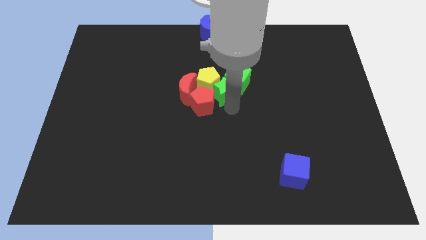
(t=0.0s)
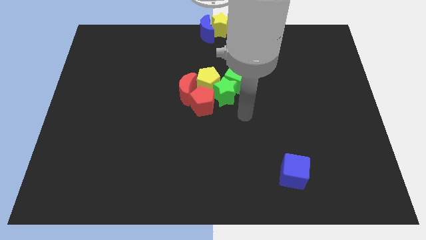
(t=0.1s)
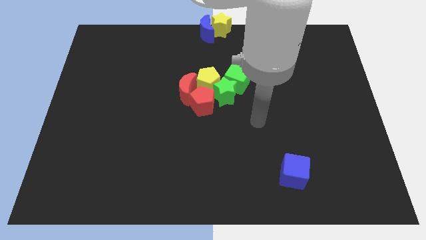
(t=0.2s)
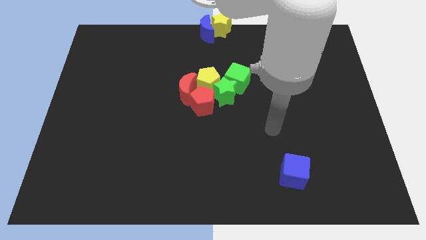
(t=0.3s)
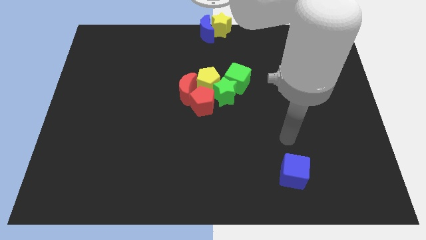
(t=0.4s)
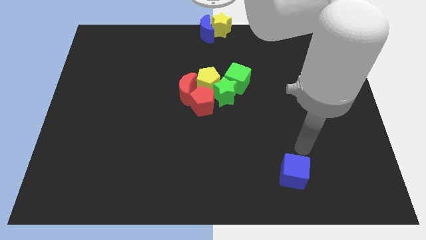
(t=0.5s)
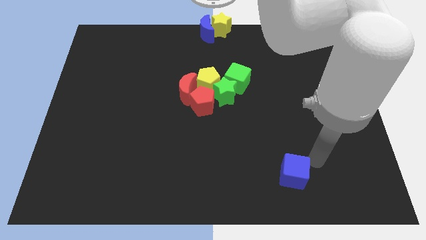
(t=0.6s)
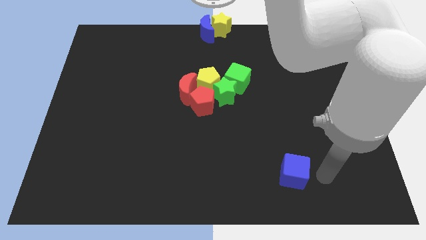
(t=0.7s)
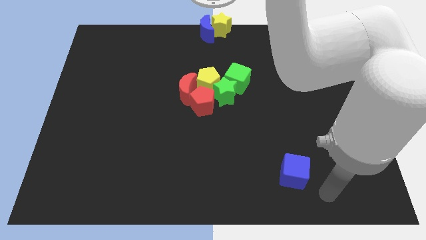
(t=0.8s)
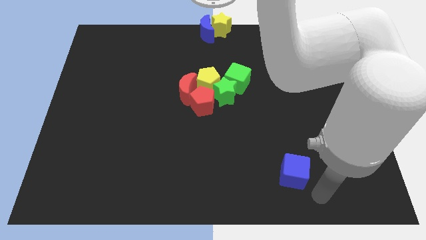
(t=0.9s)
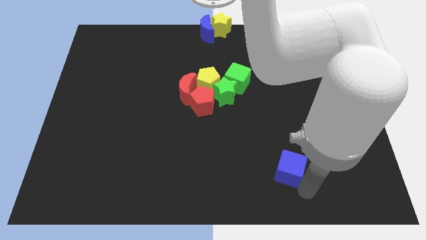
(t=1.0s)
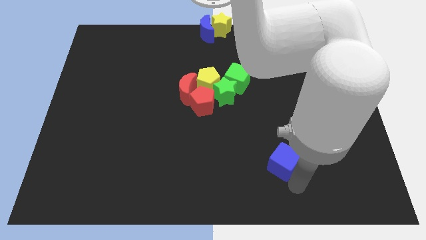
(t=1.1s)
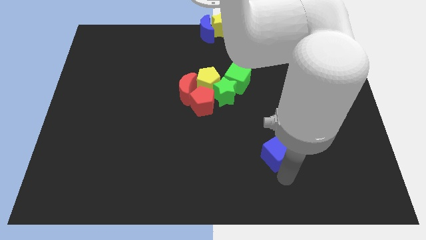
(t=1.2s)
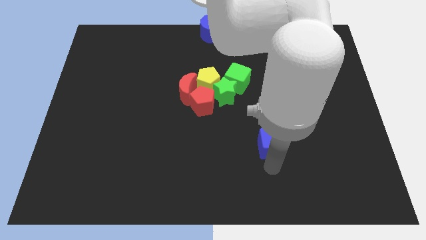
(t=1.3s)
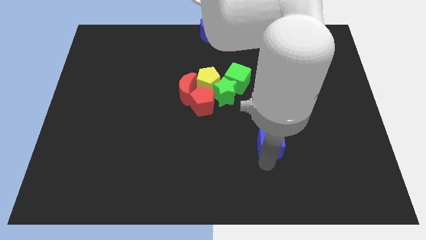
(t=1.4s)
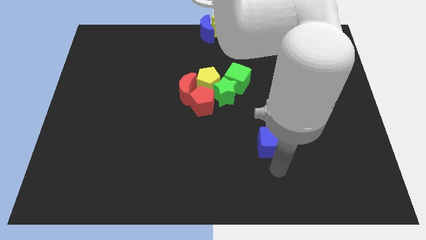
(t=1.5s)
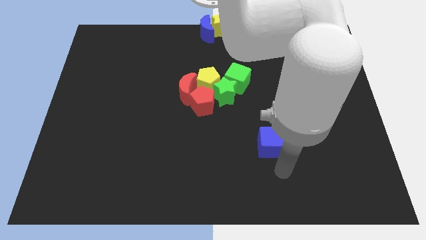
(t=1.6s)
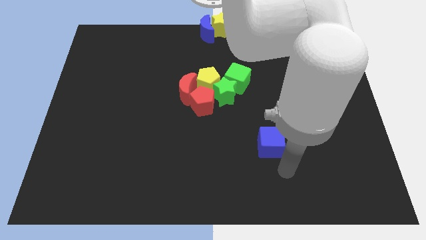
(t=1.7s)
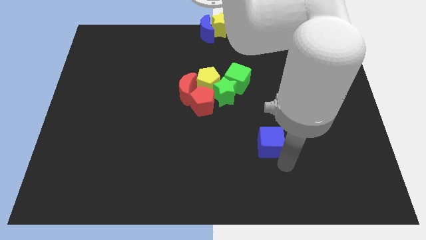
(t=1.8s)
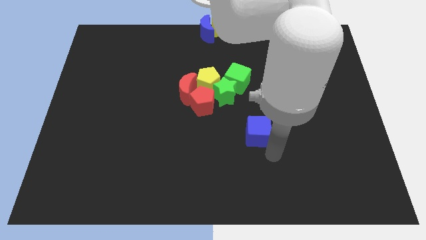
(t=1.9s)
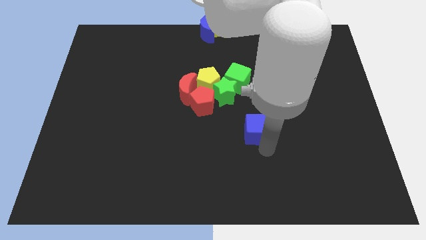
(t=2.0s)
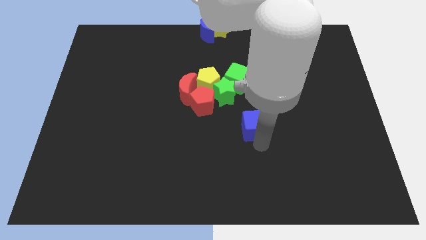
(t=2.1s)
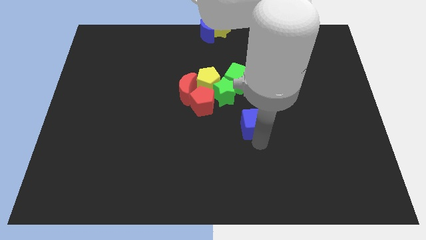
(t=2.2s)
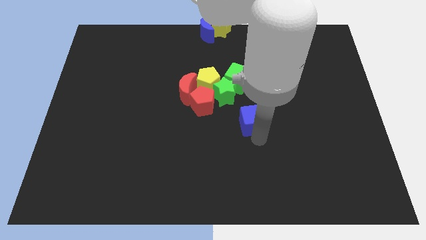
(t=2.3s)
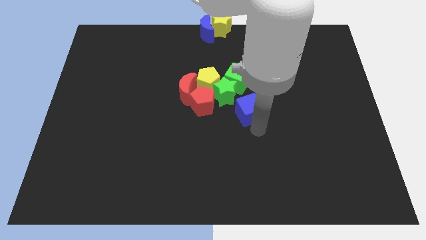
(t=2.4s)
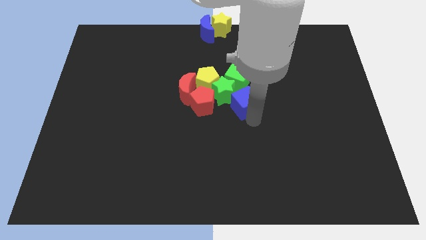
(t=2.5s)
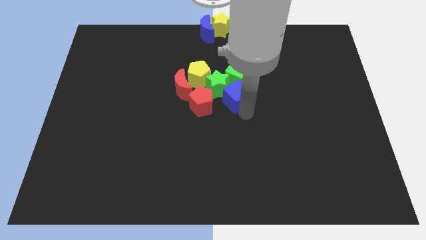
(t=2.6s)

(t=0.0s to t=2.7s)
push the blue cube into the group of blocks

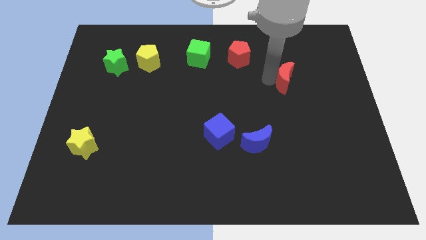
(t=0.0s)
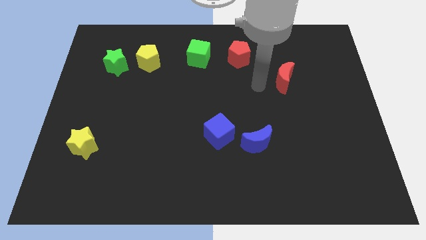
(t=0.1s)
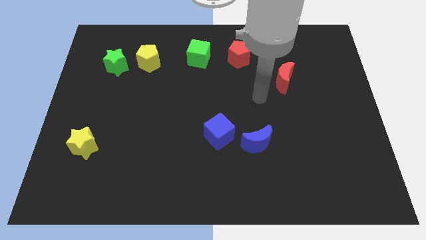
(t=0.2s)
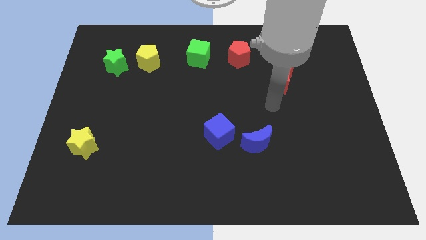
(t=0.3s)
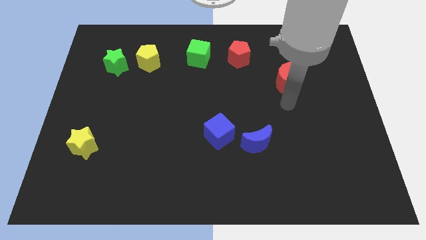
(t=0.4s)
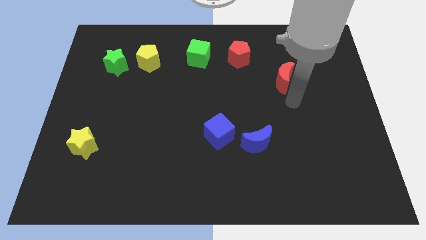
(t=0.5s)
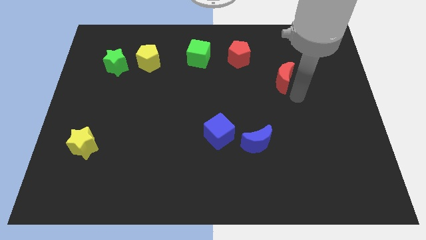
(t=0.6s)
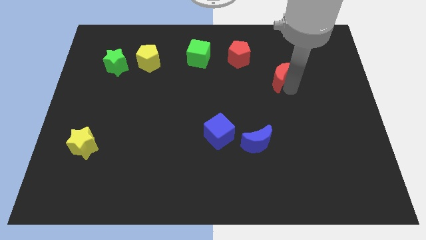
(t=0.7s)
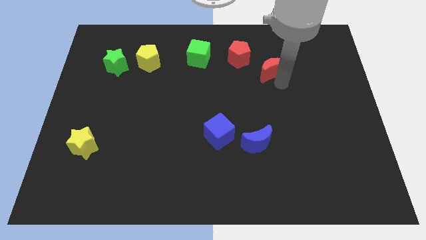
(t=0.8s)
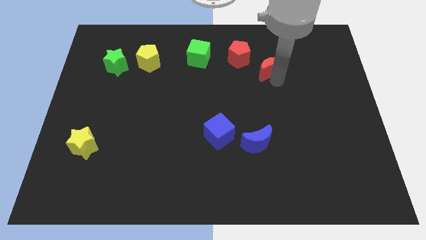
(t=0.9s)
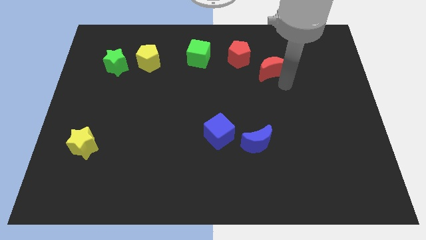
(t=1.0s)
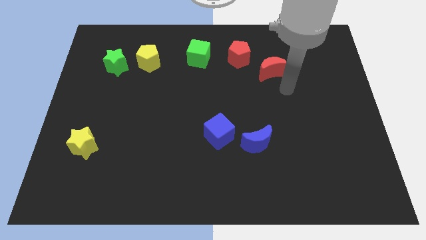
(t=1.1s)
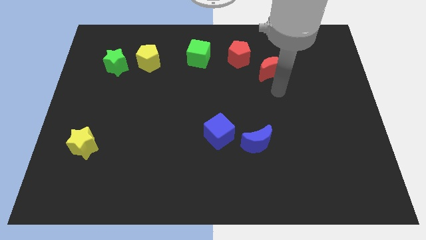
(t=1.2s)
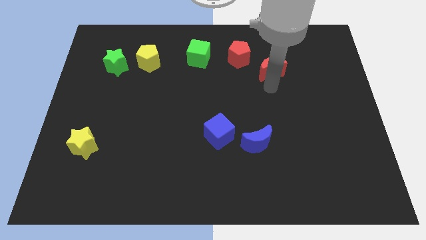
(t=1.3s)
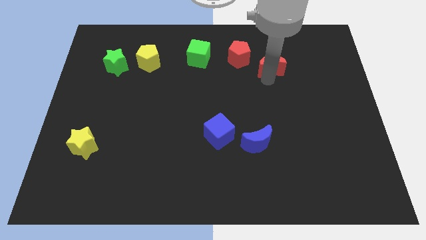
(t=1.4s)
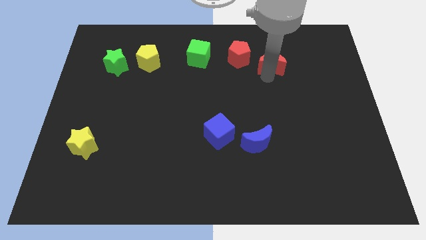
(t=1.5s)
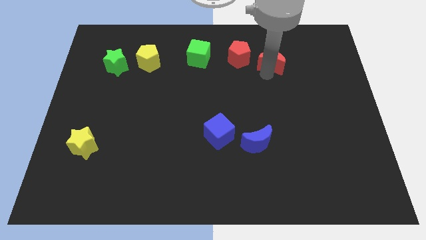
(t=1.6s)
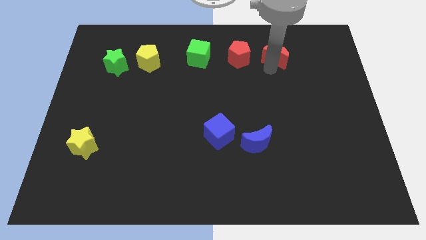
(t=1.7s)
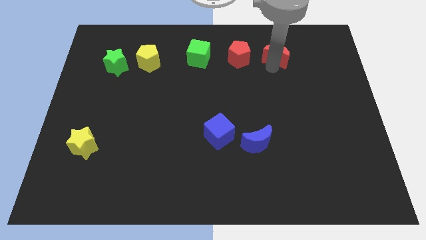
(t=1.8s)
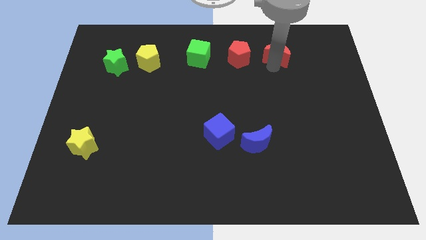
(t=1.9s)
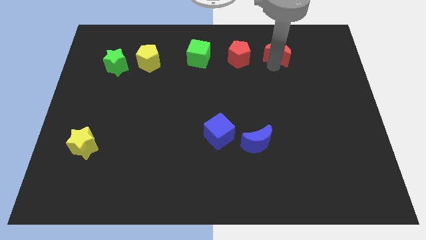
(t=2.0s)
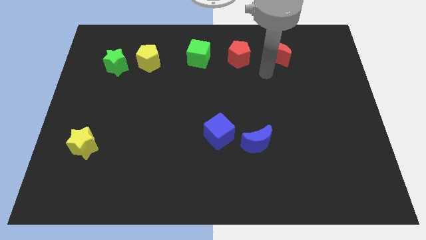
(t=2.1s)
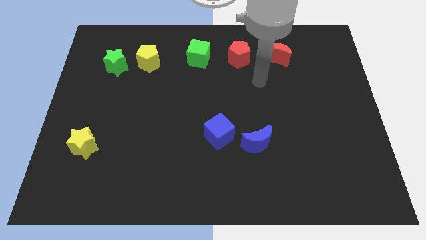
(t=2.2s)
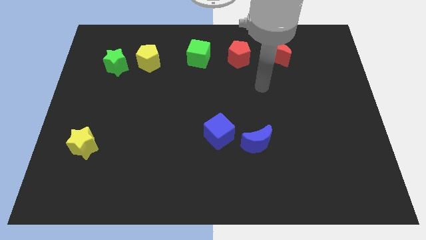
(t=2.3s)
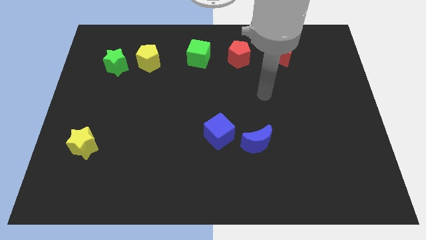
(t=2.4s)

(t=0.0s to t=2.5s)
push the red moon upward

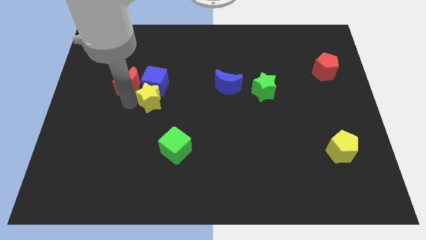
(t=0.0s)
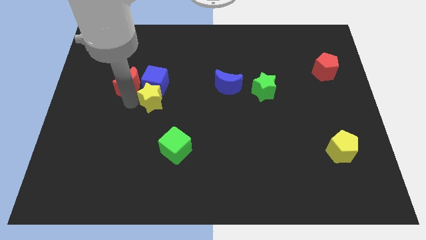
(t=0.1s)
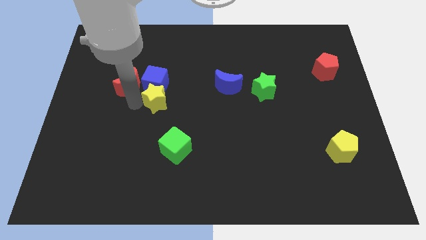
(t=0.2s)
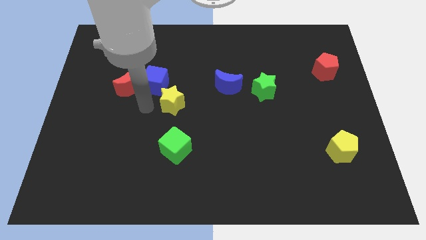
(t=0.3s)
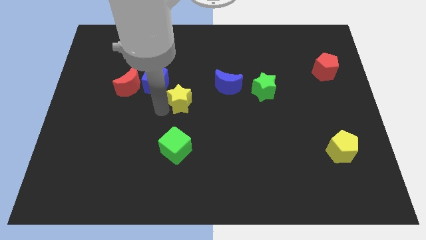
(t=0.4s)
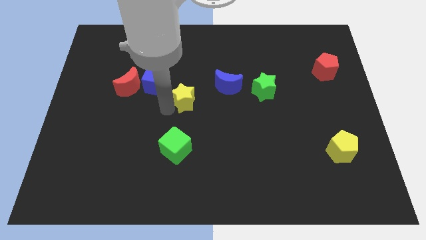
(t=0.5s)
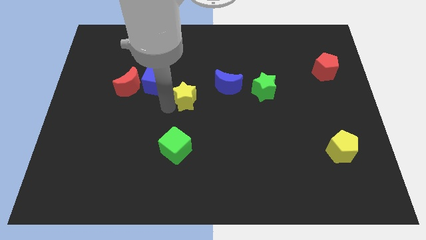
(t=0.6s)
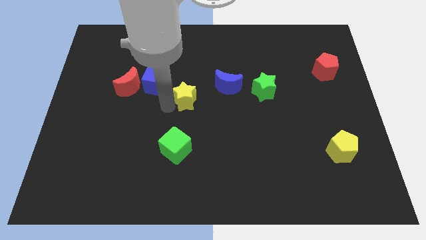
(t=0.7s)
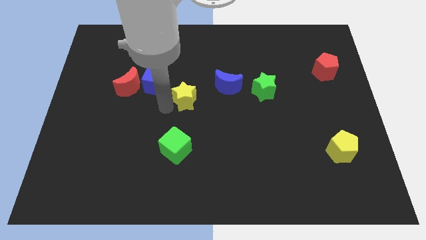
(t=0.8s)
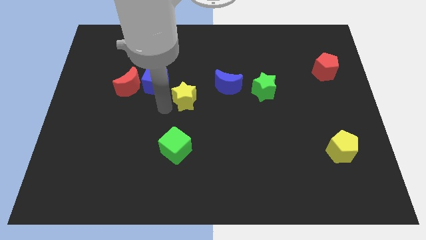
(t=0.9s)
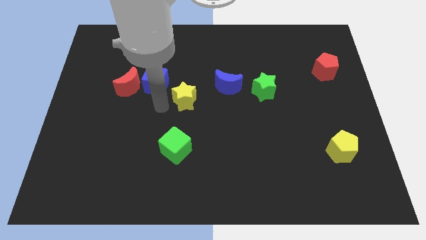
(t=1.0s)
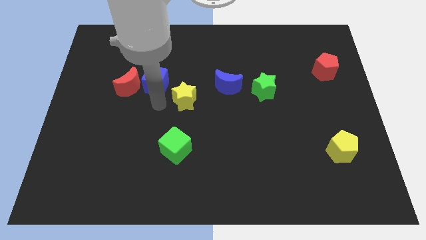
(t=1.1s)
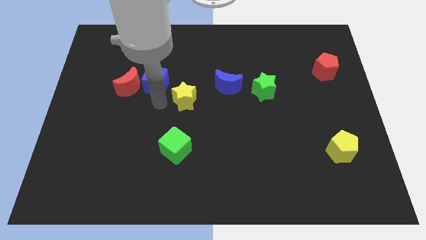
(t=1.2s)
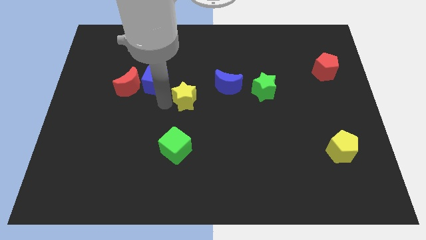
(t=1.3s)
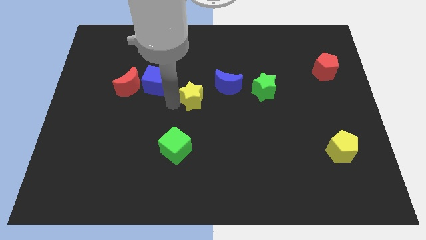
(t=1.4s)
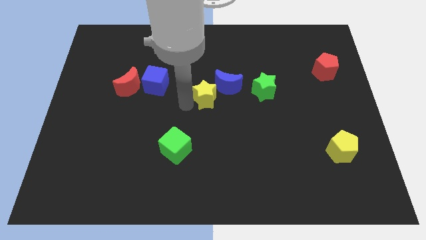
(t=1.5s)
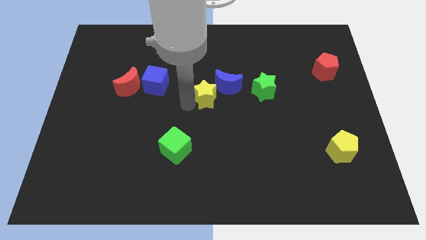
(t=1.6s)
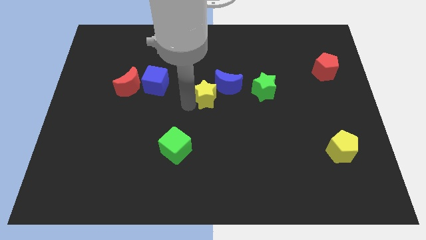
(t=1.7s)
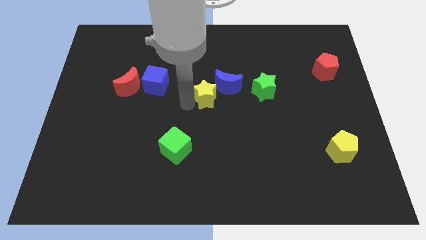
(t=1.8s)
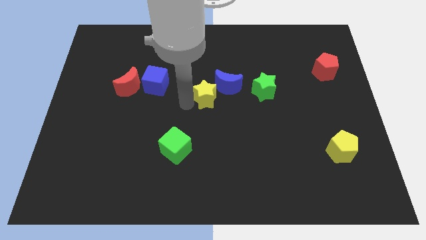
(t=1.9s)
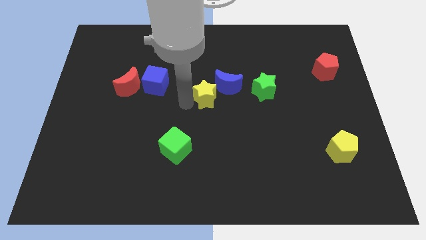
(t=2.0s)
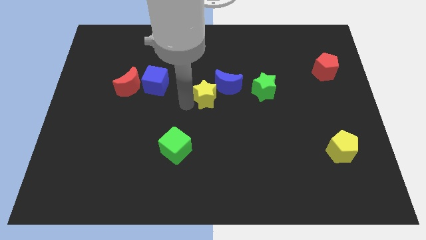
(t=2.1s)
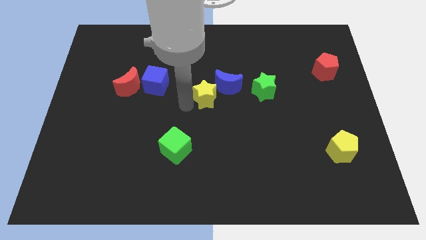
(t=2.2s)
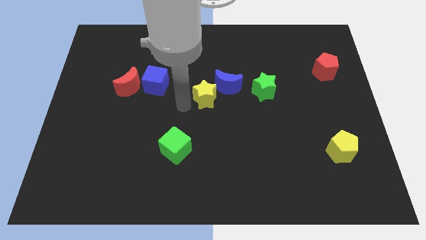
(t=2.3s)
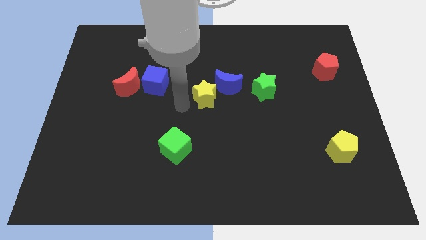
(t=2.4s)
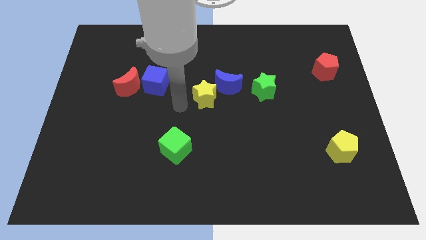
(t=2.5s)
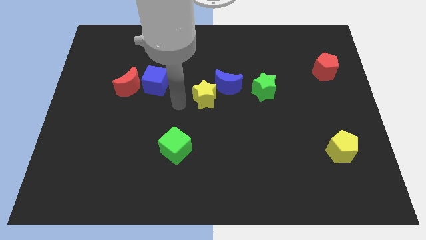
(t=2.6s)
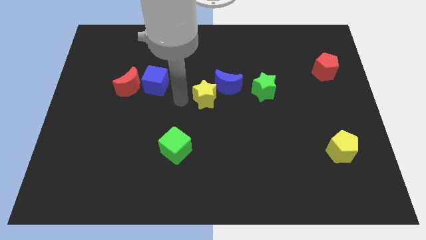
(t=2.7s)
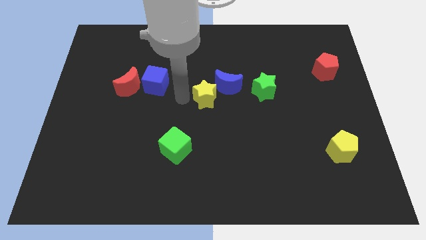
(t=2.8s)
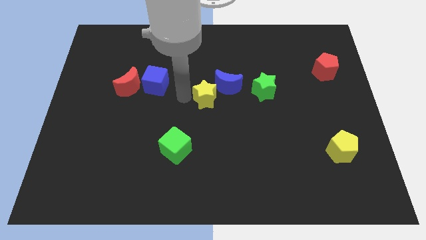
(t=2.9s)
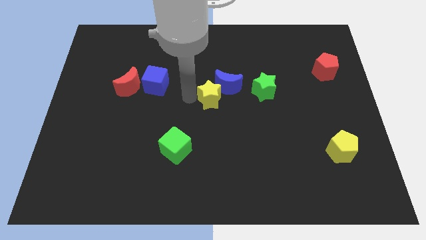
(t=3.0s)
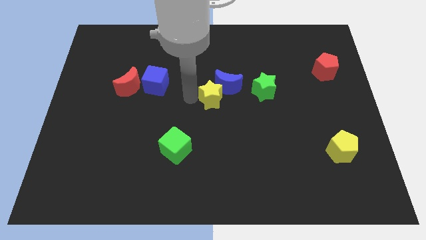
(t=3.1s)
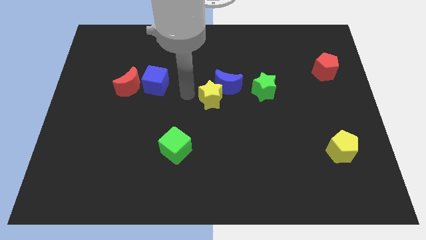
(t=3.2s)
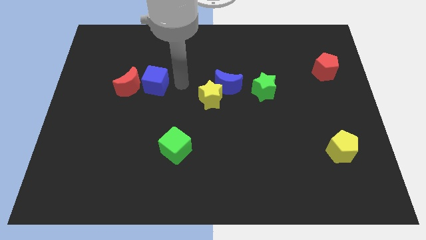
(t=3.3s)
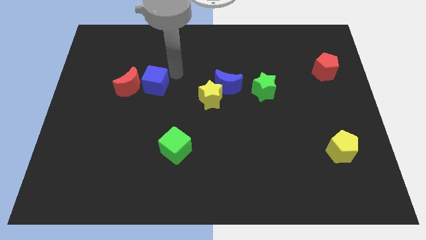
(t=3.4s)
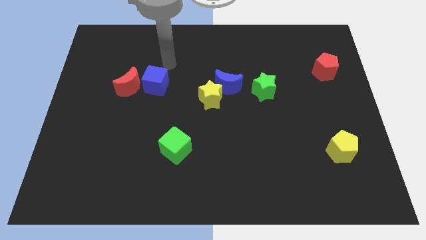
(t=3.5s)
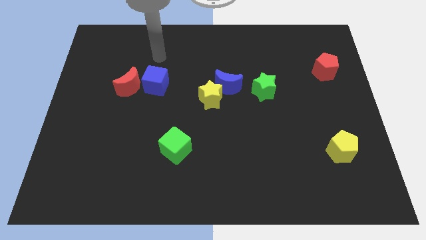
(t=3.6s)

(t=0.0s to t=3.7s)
push the yellow star to the bottom left side of the blue crescent
